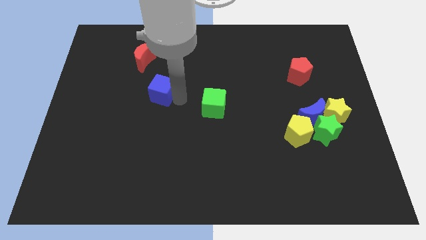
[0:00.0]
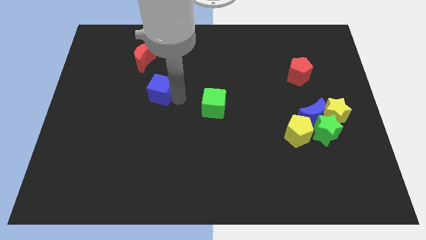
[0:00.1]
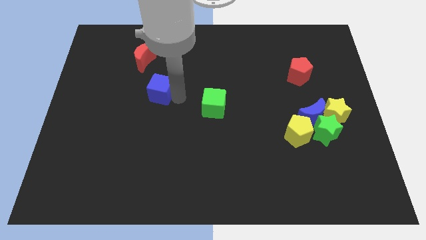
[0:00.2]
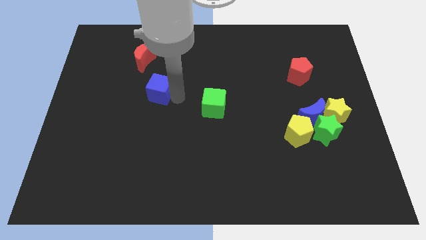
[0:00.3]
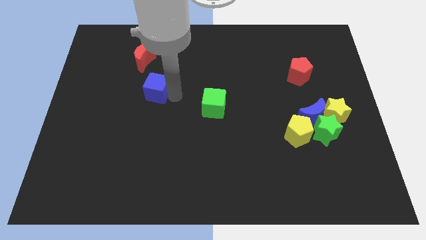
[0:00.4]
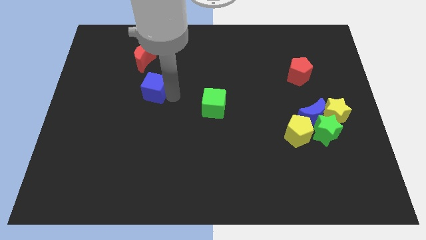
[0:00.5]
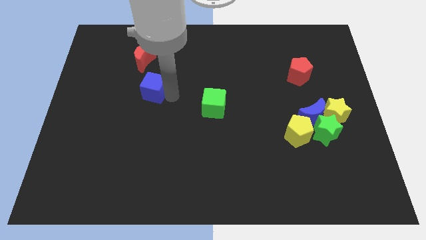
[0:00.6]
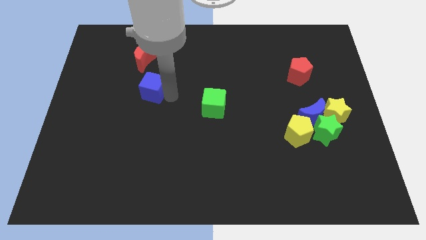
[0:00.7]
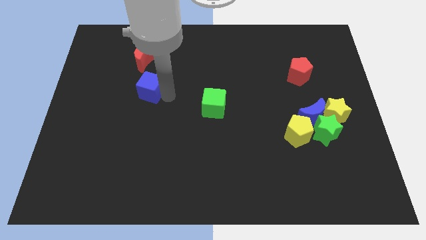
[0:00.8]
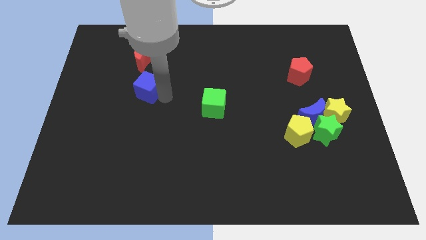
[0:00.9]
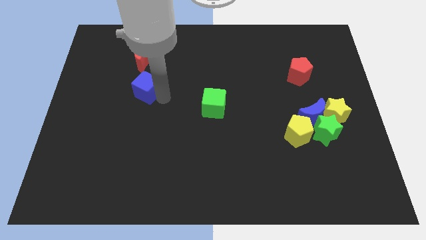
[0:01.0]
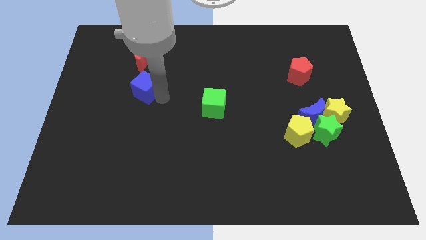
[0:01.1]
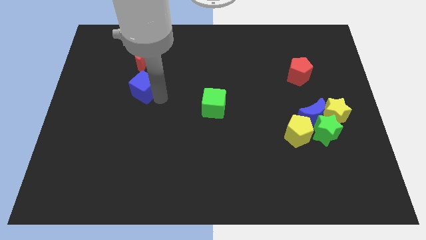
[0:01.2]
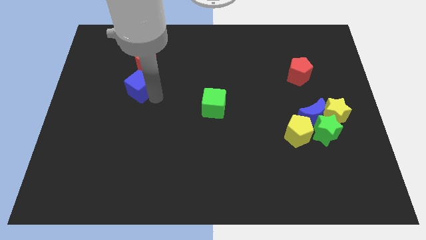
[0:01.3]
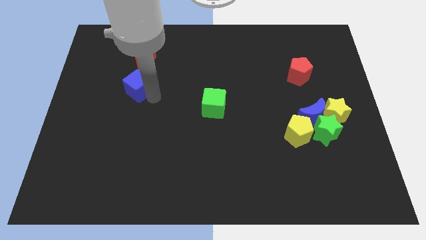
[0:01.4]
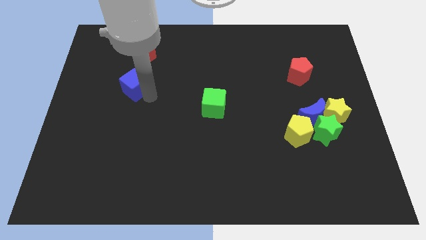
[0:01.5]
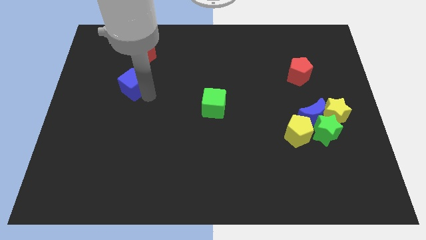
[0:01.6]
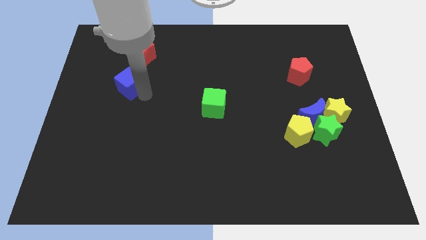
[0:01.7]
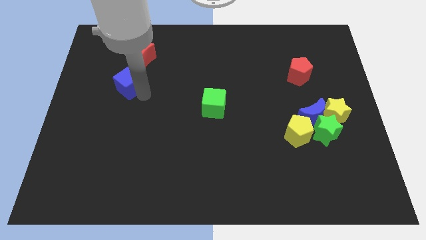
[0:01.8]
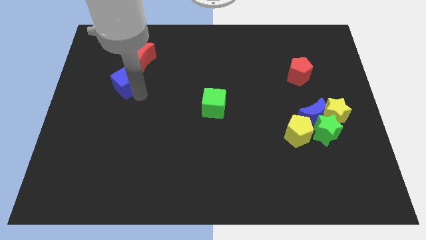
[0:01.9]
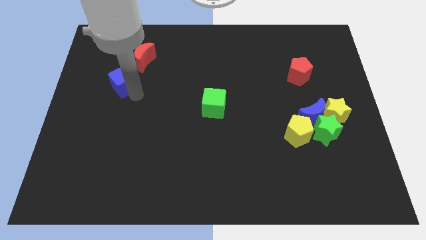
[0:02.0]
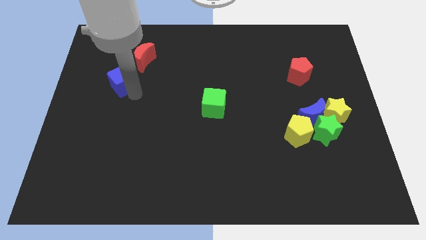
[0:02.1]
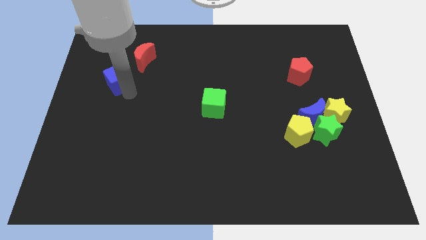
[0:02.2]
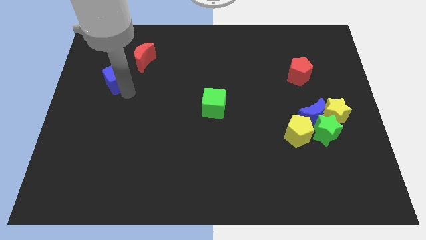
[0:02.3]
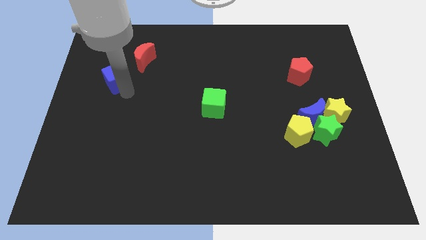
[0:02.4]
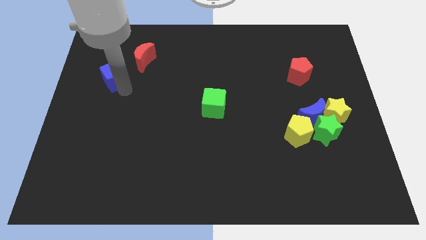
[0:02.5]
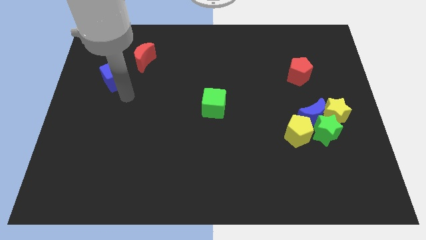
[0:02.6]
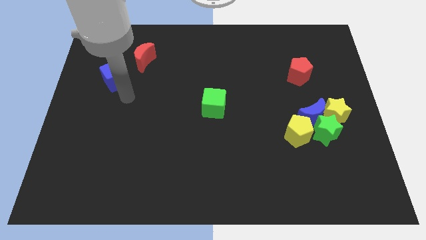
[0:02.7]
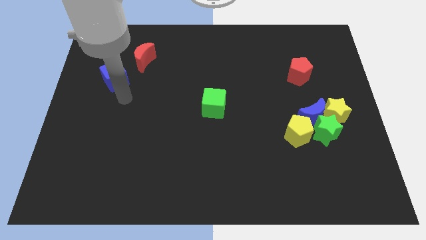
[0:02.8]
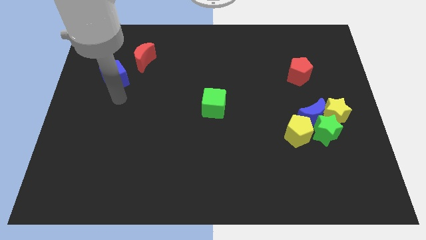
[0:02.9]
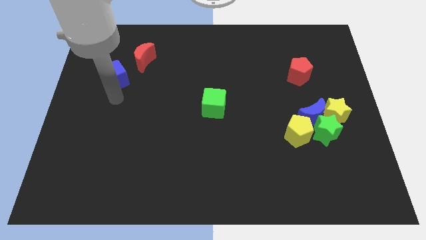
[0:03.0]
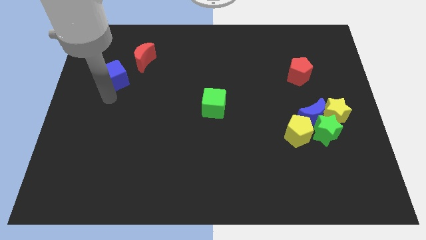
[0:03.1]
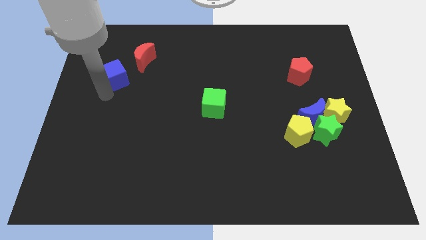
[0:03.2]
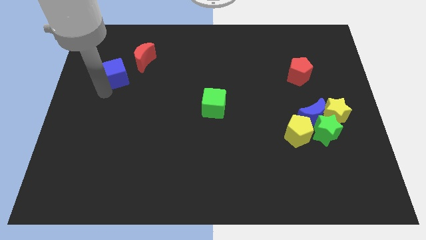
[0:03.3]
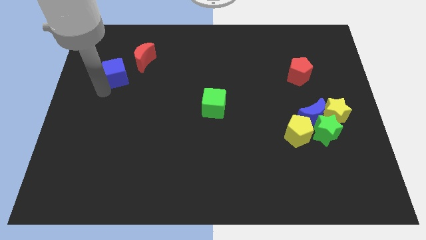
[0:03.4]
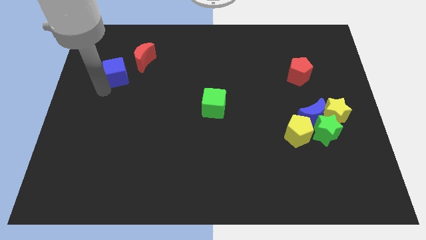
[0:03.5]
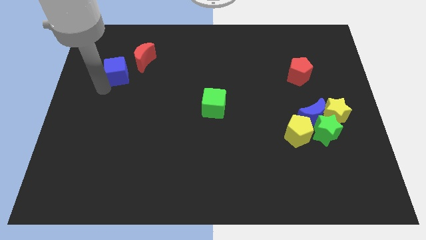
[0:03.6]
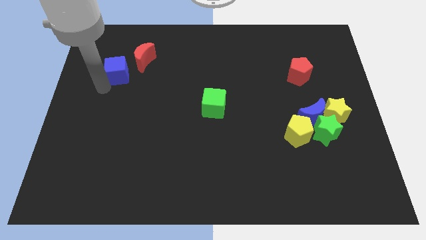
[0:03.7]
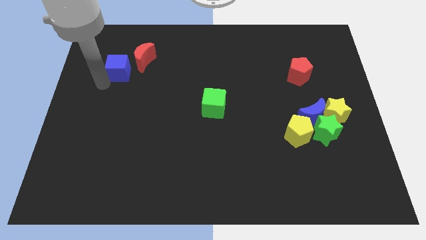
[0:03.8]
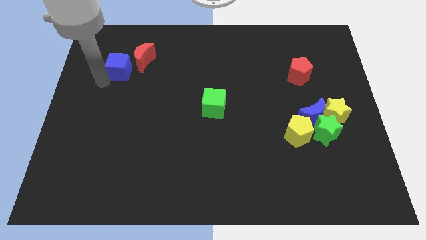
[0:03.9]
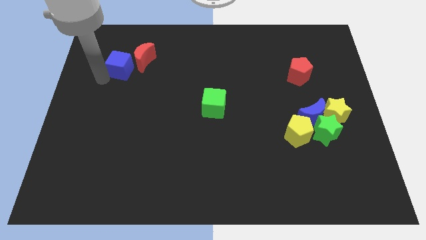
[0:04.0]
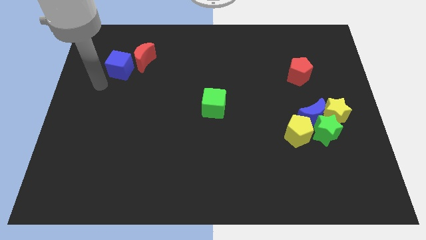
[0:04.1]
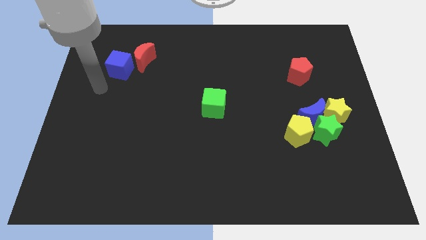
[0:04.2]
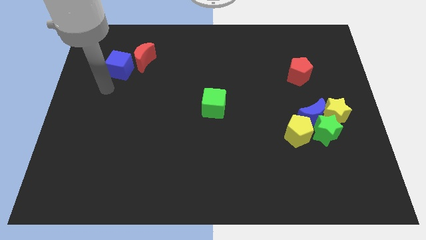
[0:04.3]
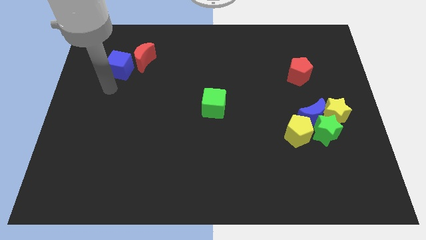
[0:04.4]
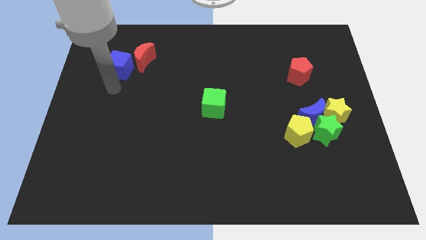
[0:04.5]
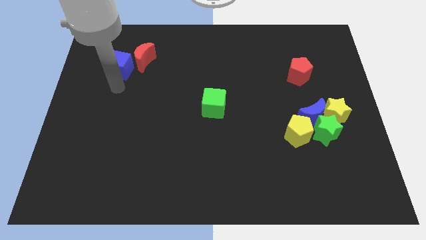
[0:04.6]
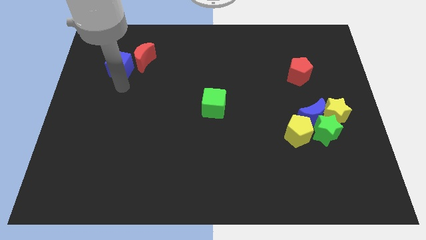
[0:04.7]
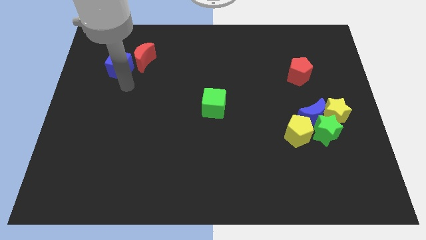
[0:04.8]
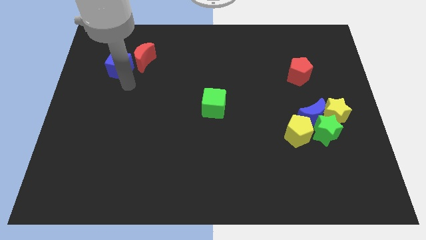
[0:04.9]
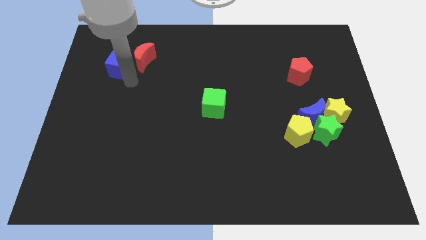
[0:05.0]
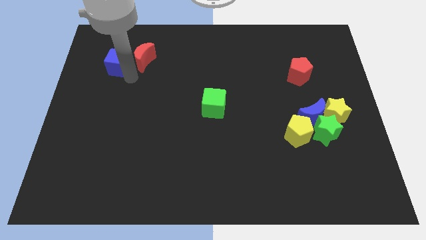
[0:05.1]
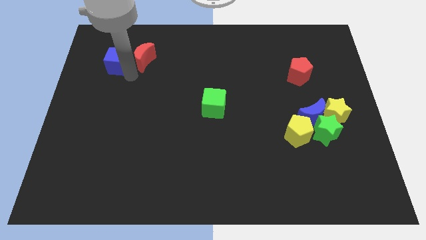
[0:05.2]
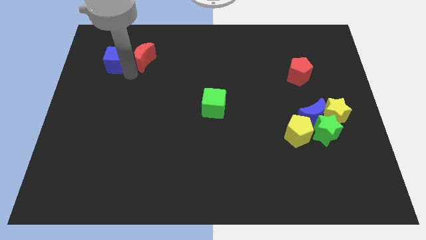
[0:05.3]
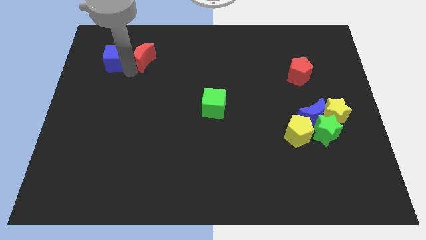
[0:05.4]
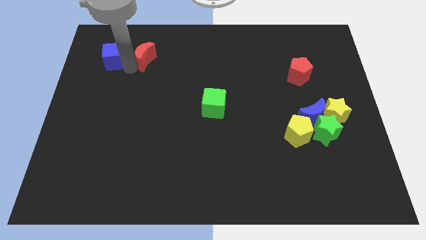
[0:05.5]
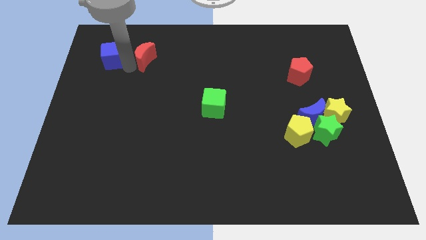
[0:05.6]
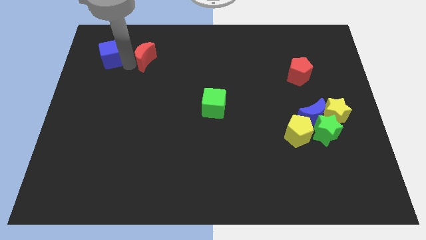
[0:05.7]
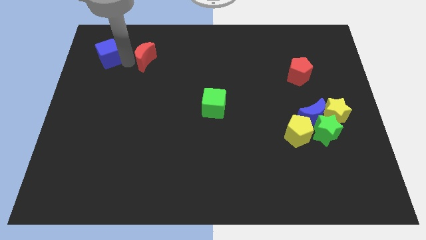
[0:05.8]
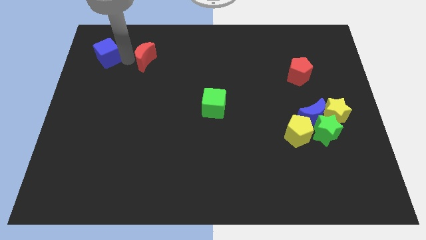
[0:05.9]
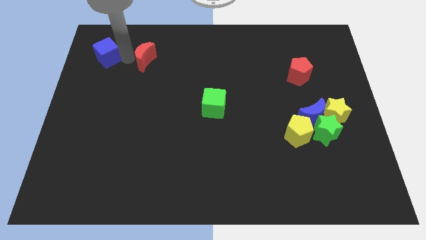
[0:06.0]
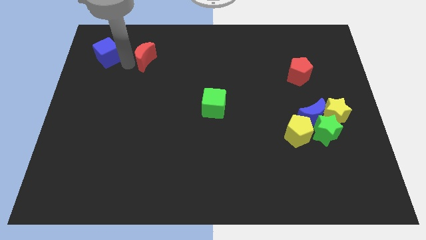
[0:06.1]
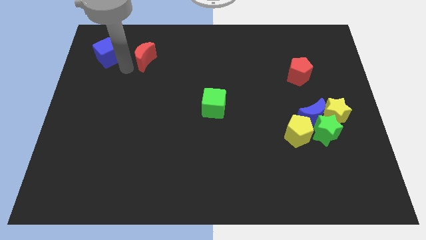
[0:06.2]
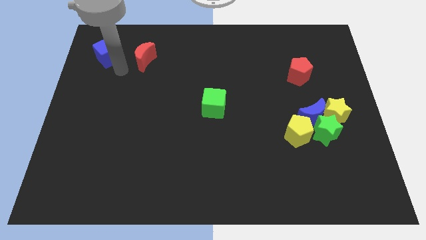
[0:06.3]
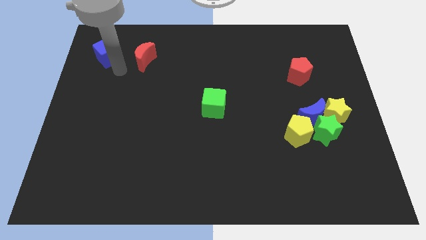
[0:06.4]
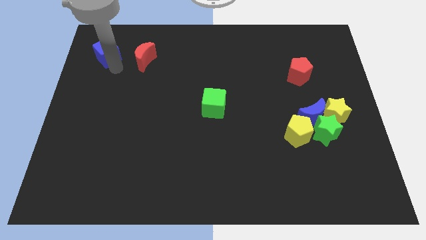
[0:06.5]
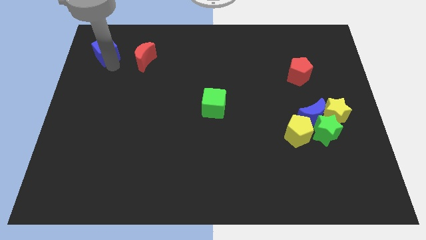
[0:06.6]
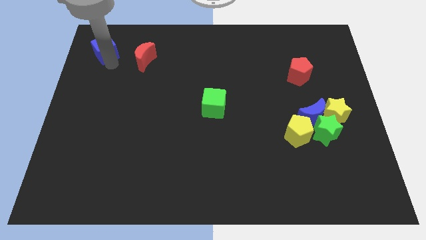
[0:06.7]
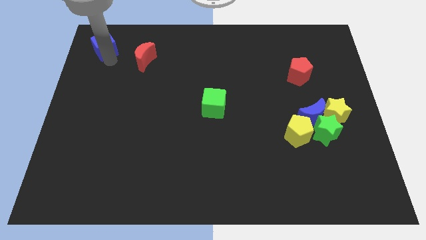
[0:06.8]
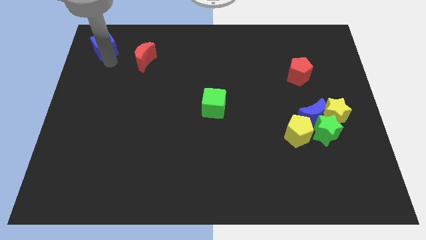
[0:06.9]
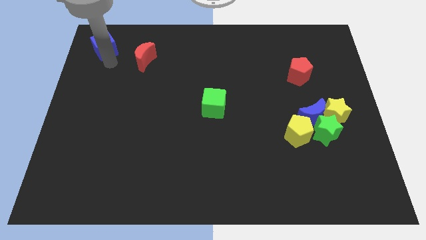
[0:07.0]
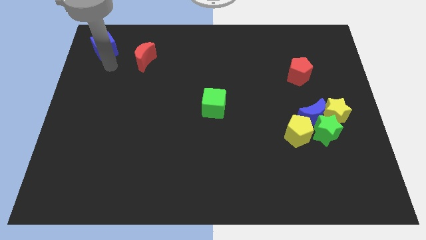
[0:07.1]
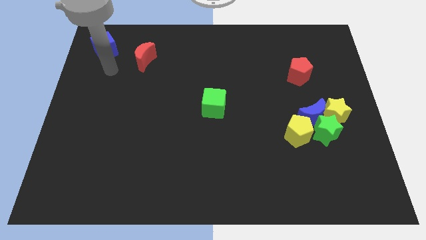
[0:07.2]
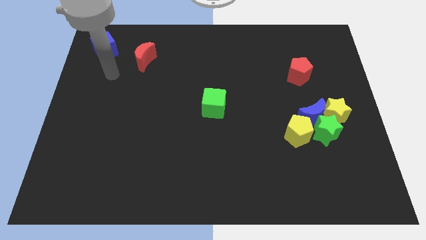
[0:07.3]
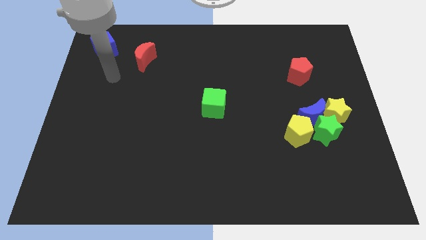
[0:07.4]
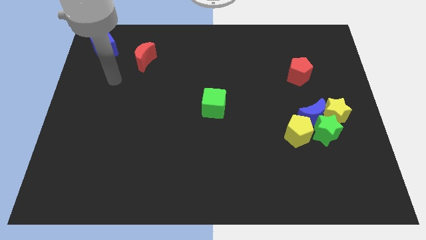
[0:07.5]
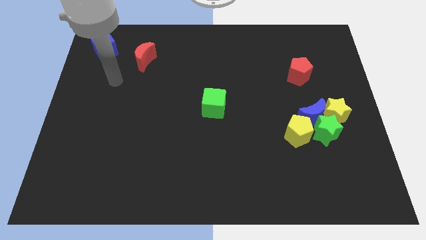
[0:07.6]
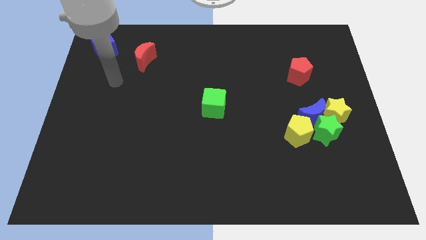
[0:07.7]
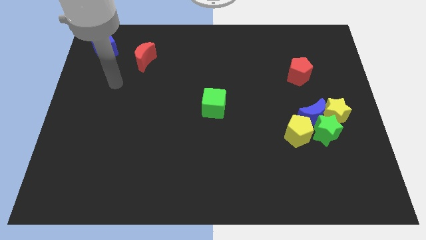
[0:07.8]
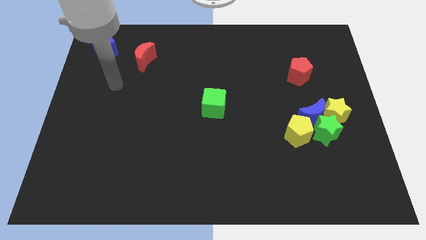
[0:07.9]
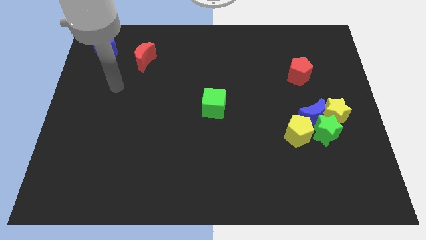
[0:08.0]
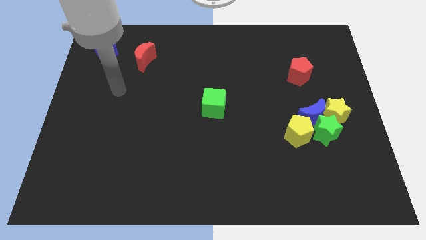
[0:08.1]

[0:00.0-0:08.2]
place the blue cube above the red moon

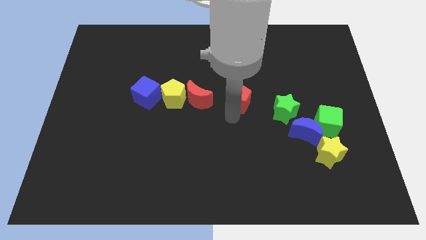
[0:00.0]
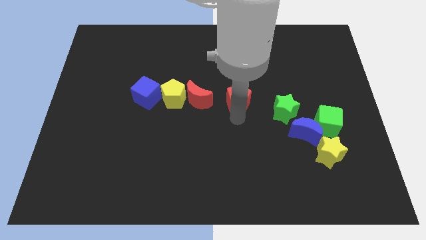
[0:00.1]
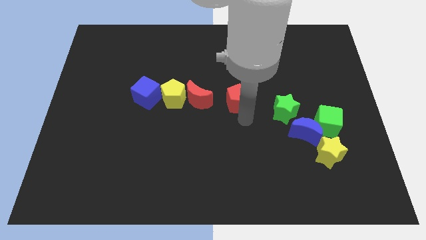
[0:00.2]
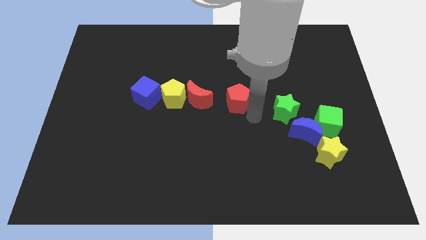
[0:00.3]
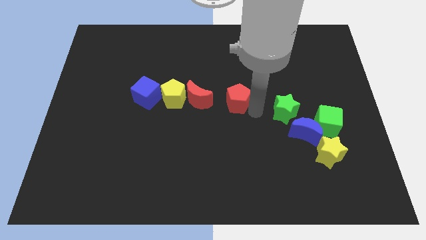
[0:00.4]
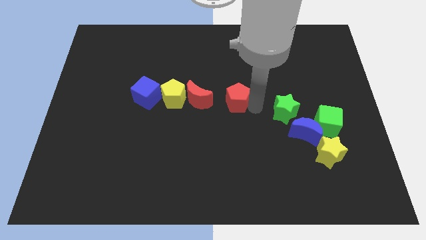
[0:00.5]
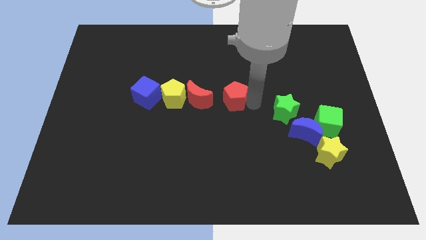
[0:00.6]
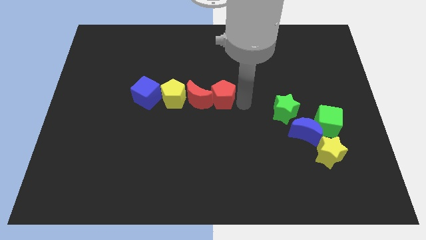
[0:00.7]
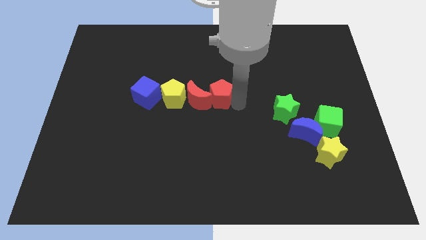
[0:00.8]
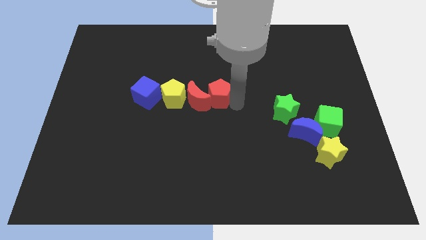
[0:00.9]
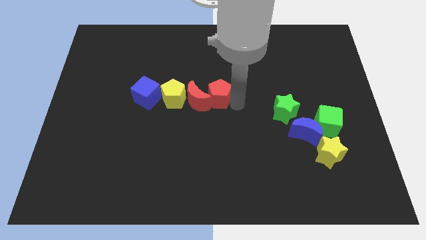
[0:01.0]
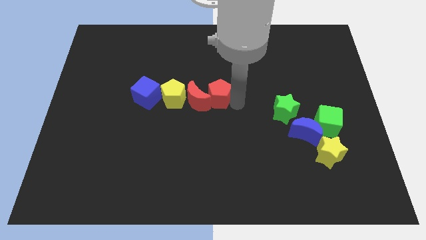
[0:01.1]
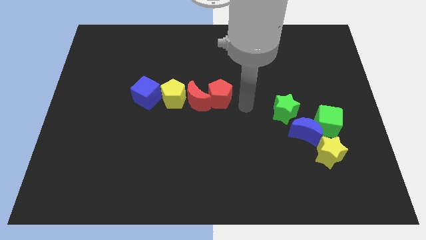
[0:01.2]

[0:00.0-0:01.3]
move the red pentagon right to the red crescent
